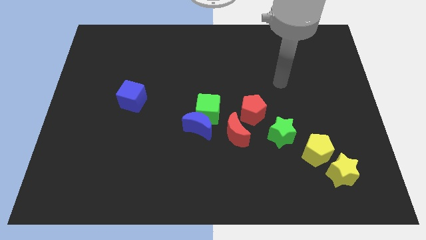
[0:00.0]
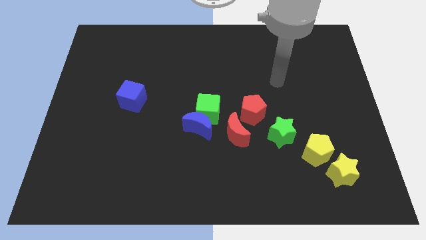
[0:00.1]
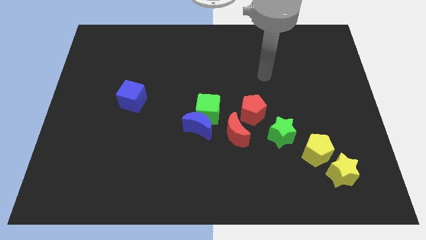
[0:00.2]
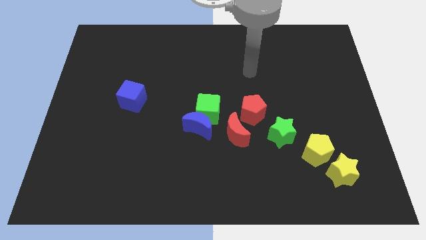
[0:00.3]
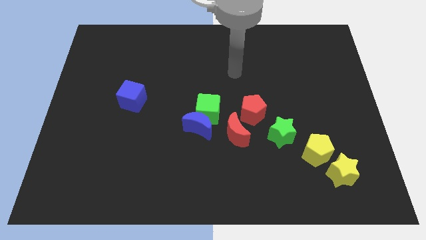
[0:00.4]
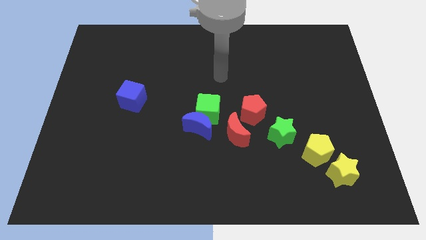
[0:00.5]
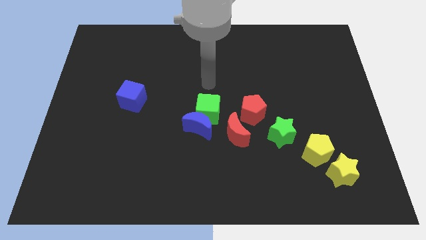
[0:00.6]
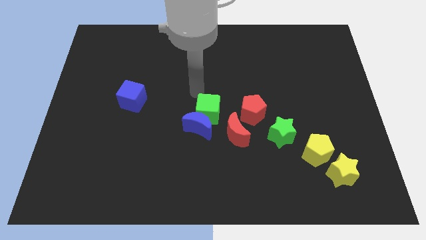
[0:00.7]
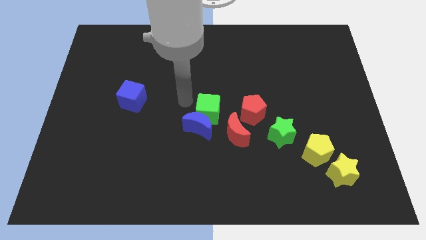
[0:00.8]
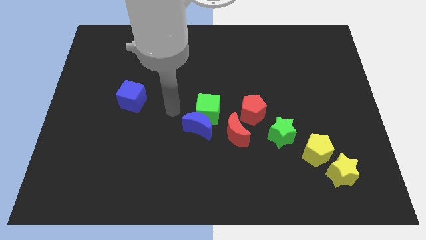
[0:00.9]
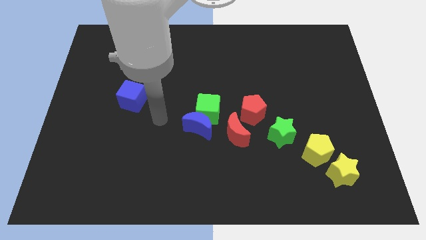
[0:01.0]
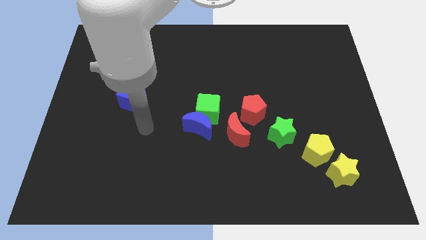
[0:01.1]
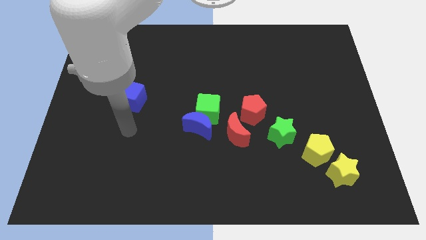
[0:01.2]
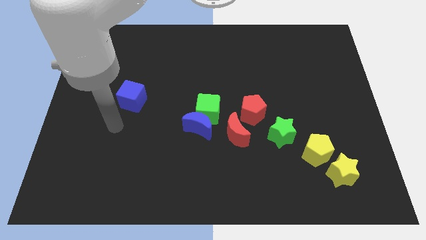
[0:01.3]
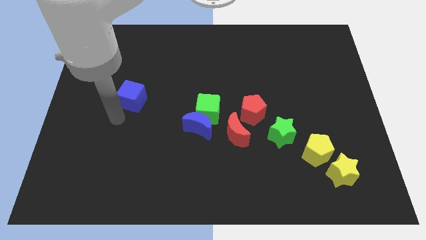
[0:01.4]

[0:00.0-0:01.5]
move your arm towards the blue cube

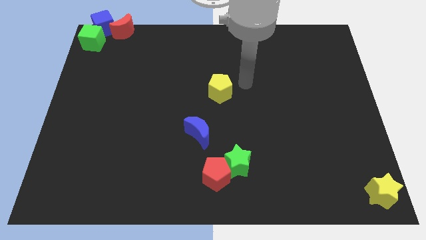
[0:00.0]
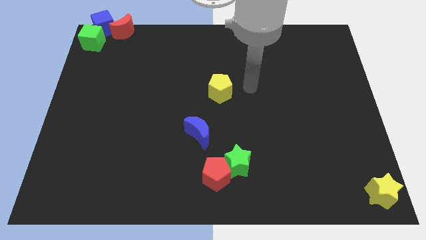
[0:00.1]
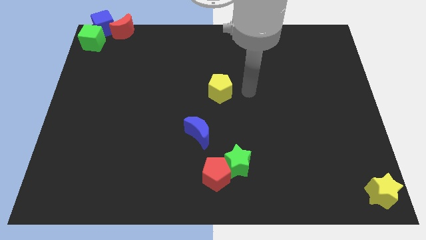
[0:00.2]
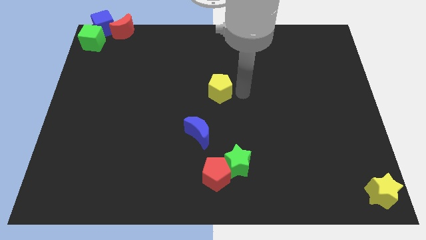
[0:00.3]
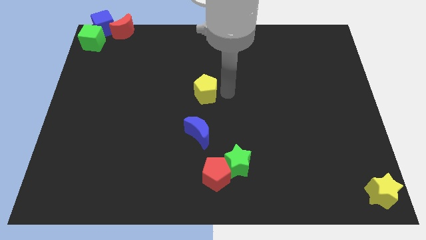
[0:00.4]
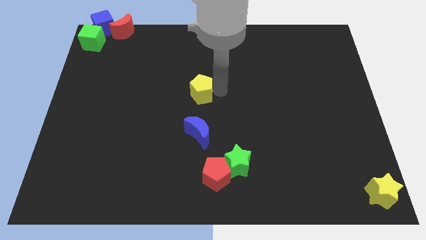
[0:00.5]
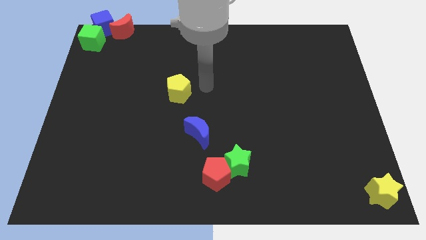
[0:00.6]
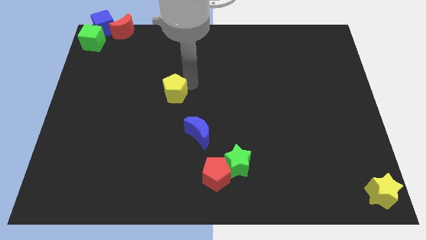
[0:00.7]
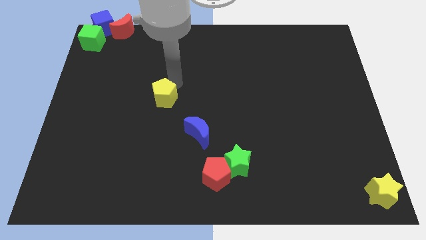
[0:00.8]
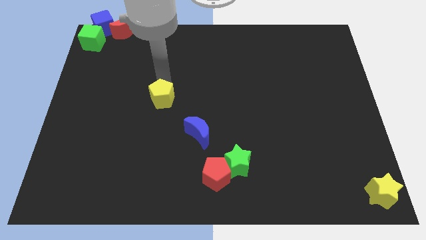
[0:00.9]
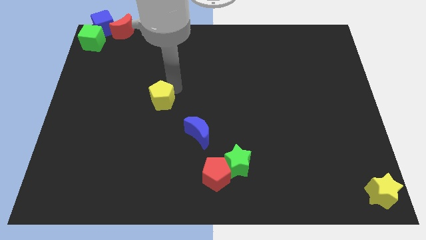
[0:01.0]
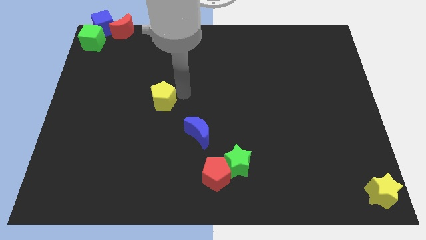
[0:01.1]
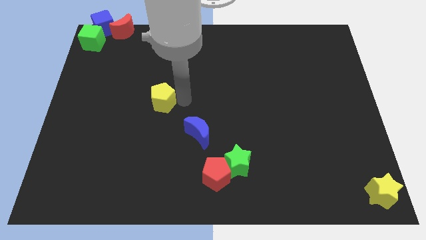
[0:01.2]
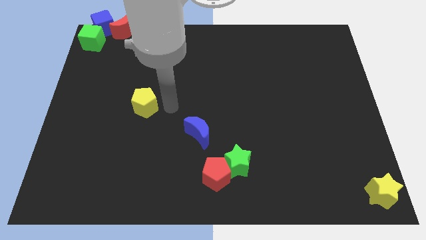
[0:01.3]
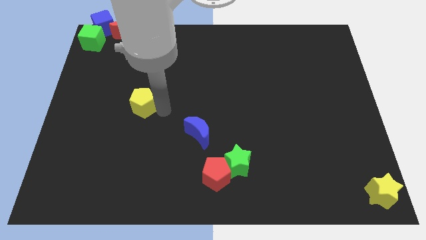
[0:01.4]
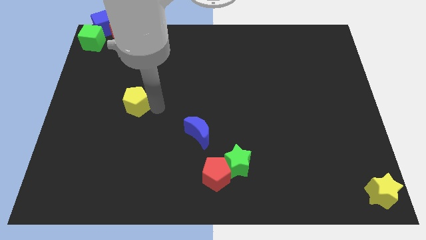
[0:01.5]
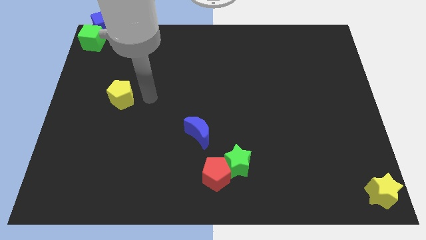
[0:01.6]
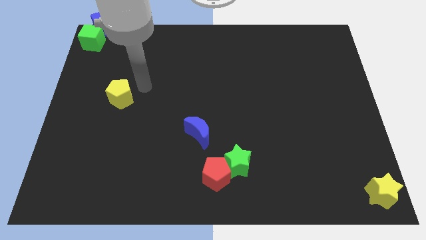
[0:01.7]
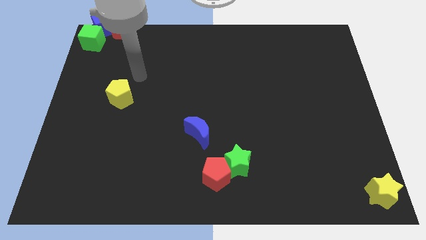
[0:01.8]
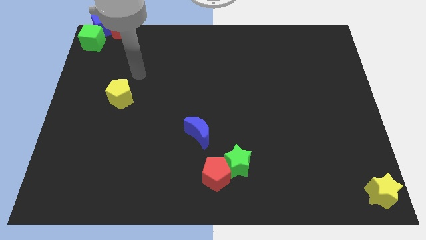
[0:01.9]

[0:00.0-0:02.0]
push the yellow pentagon to the left side

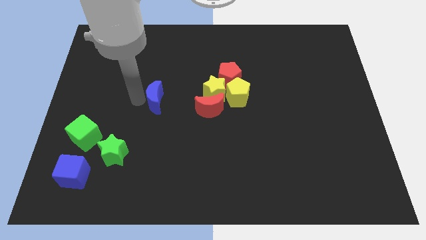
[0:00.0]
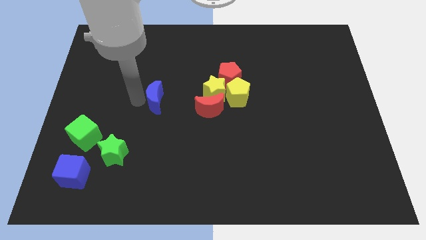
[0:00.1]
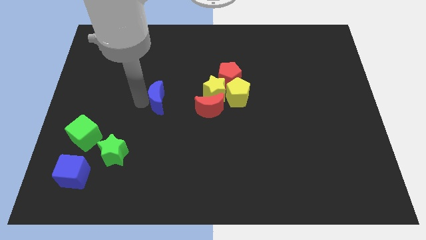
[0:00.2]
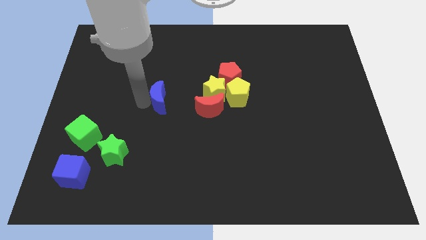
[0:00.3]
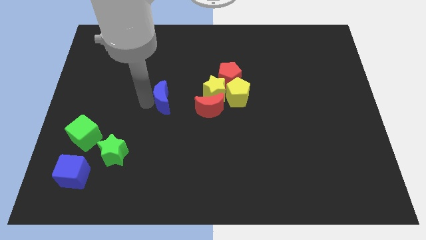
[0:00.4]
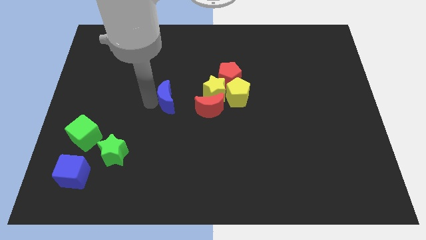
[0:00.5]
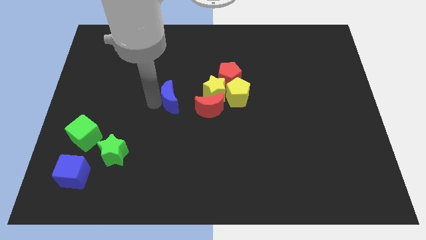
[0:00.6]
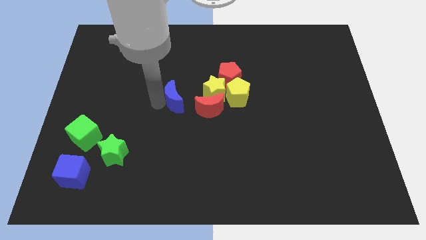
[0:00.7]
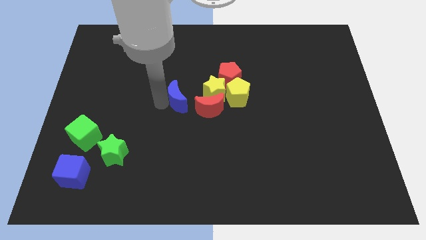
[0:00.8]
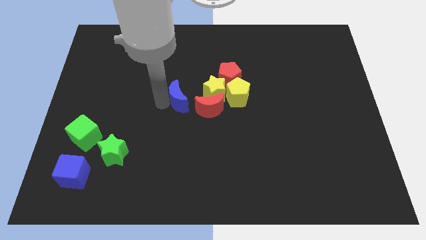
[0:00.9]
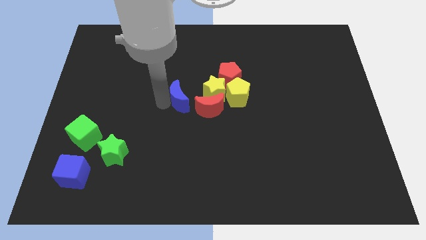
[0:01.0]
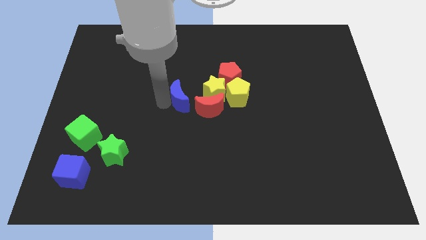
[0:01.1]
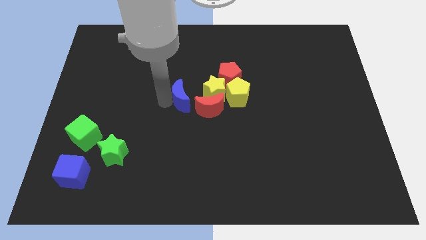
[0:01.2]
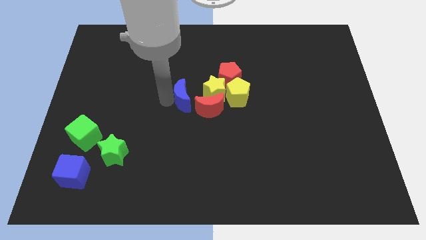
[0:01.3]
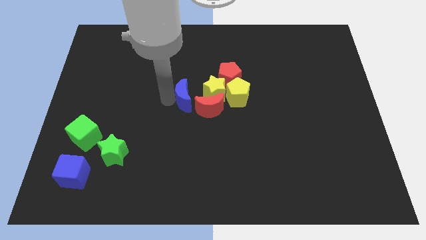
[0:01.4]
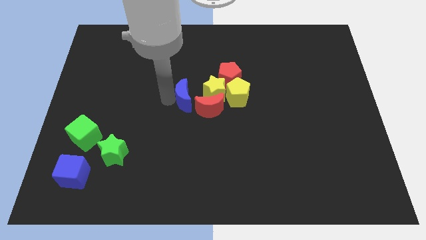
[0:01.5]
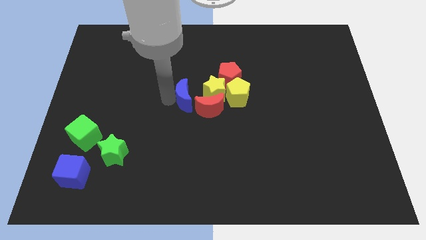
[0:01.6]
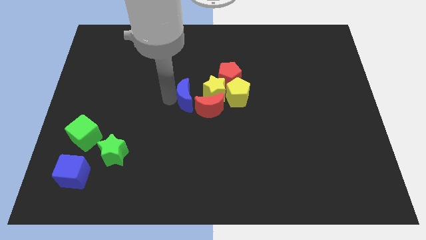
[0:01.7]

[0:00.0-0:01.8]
push the blue crescent into the red crescent

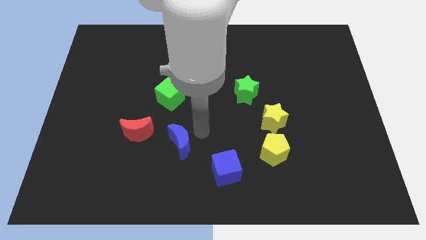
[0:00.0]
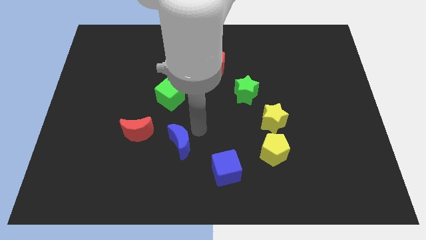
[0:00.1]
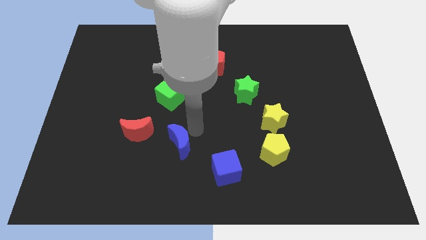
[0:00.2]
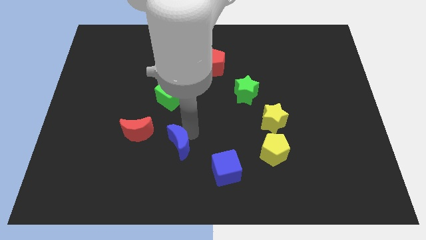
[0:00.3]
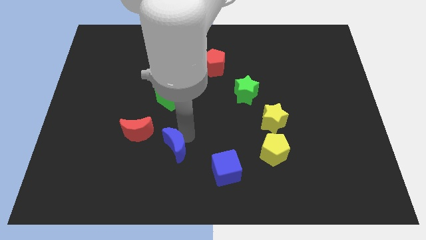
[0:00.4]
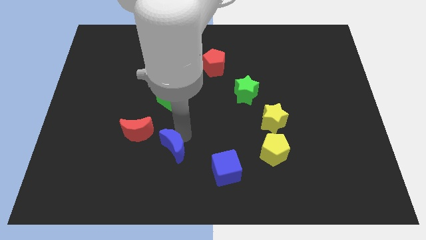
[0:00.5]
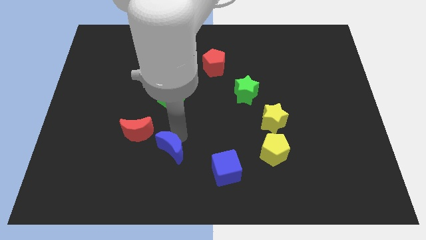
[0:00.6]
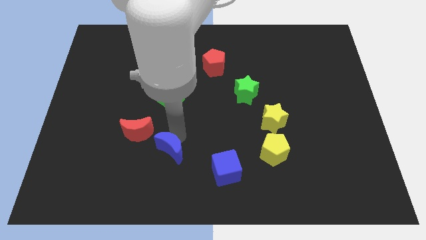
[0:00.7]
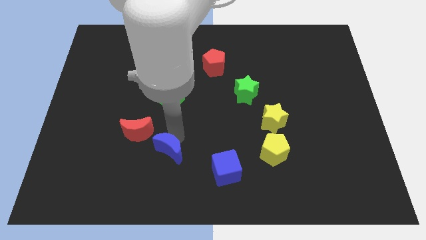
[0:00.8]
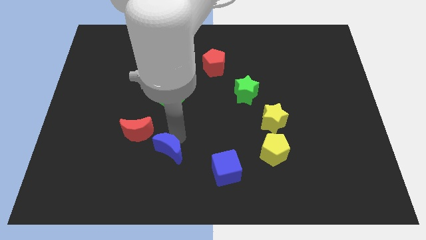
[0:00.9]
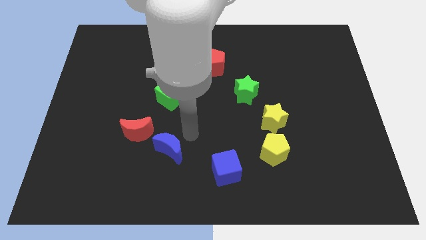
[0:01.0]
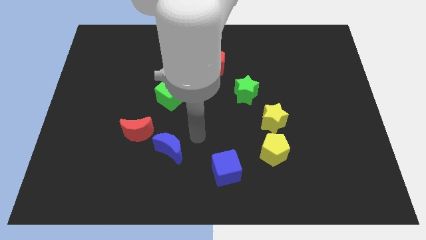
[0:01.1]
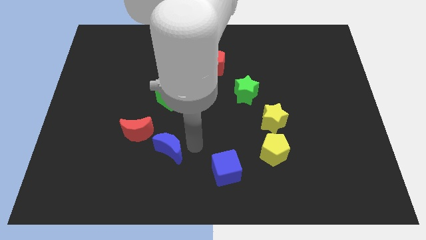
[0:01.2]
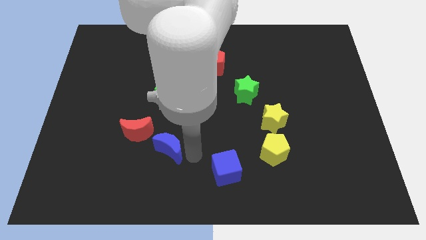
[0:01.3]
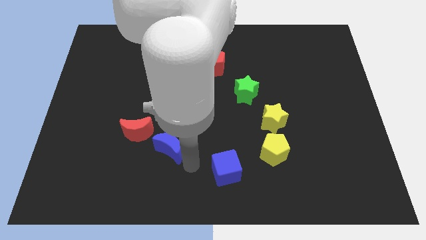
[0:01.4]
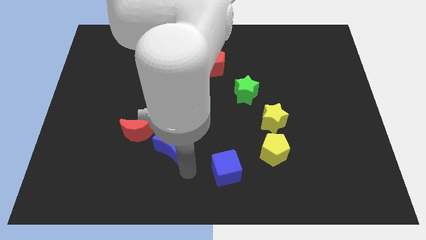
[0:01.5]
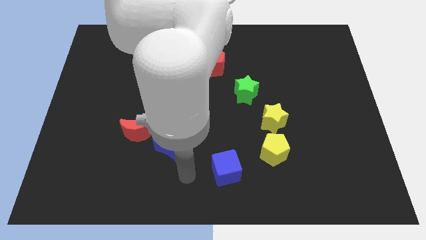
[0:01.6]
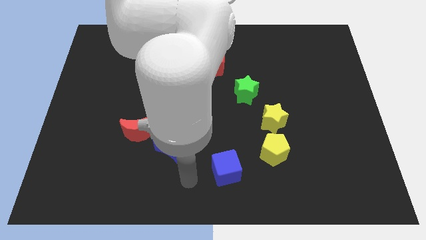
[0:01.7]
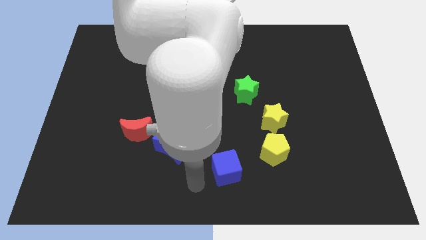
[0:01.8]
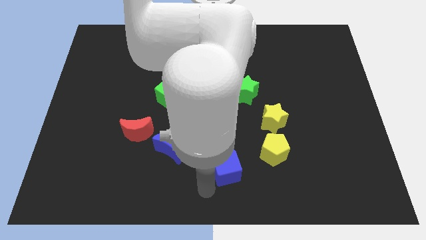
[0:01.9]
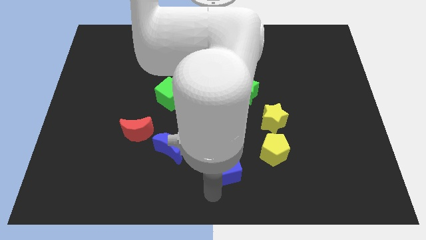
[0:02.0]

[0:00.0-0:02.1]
move the blue crescent to the right of the red crescent

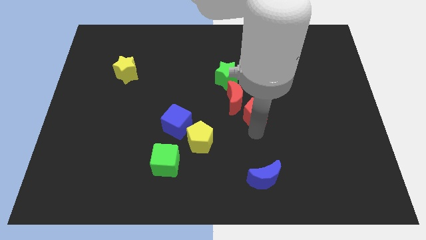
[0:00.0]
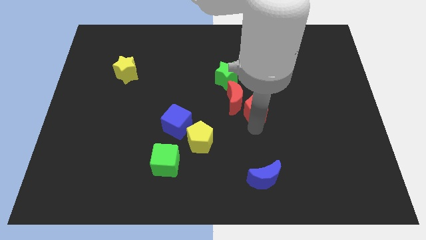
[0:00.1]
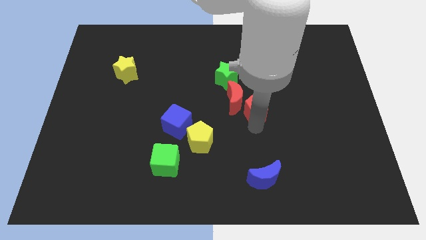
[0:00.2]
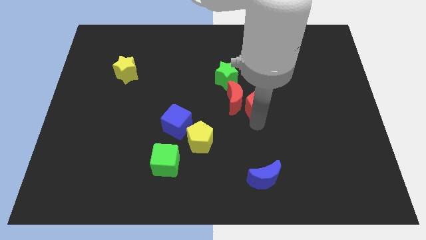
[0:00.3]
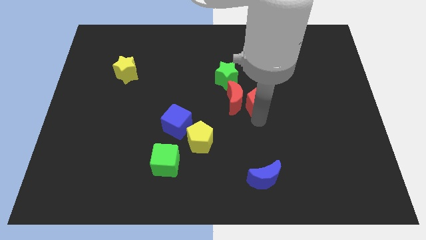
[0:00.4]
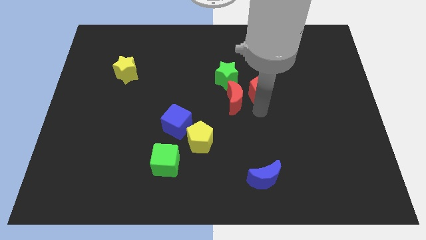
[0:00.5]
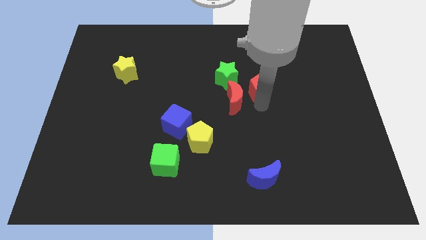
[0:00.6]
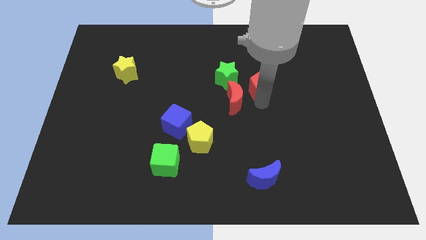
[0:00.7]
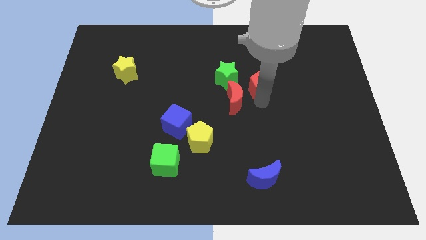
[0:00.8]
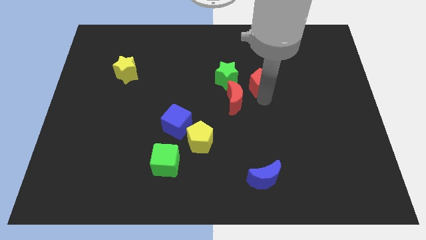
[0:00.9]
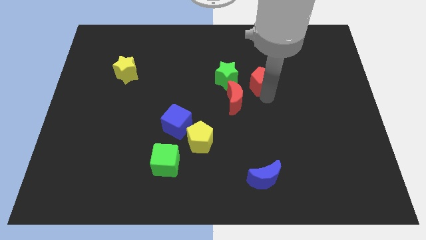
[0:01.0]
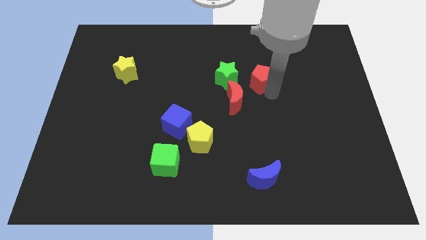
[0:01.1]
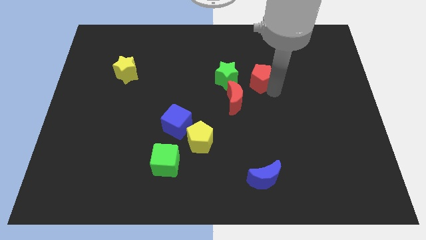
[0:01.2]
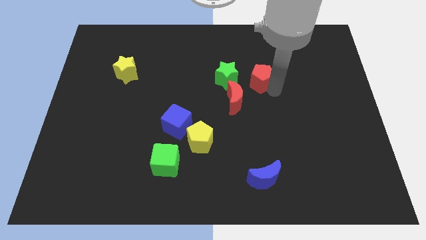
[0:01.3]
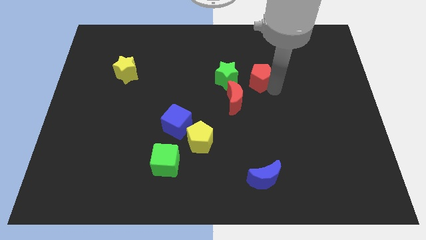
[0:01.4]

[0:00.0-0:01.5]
slide red pentagon to the right of green star

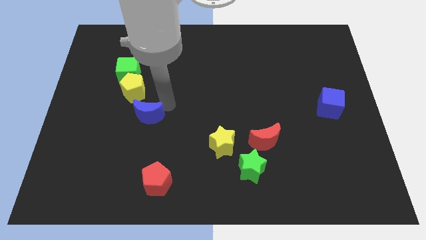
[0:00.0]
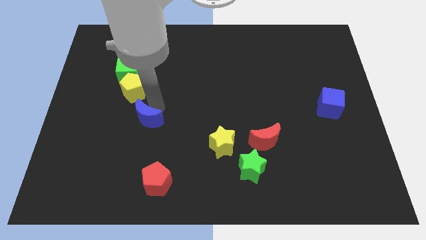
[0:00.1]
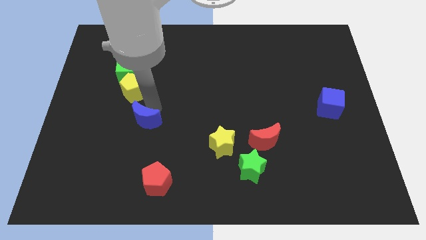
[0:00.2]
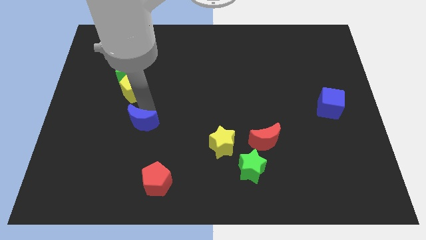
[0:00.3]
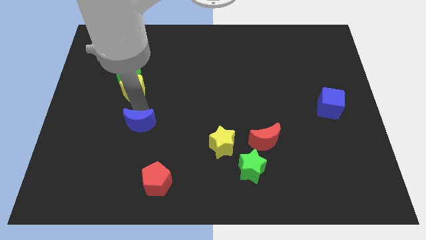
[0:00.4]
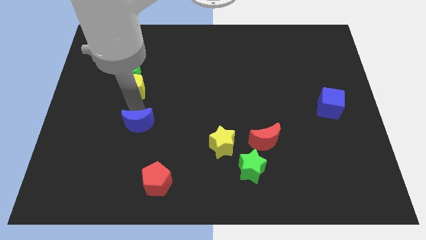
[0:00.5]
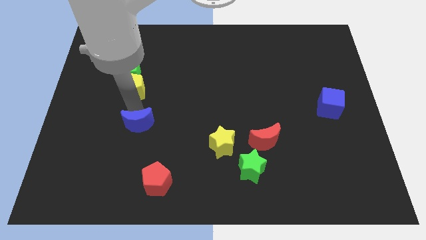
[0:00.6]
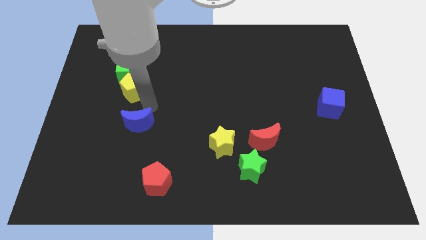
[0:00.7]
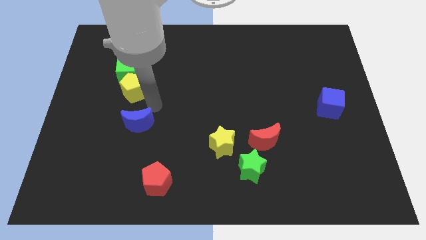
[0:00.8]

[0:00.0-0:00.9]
push the blue crescent slightly downwards